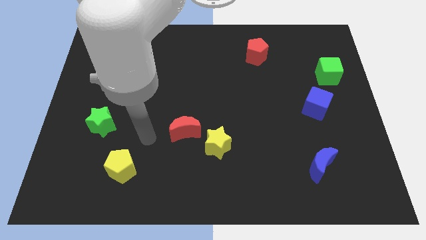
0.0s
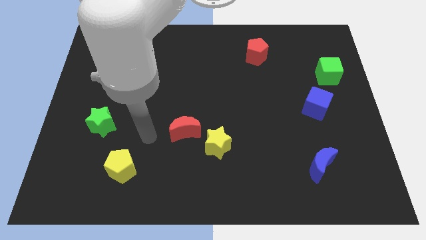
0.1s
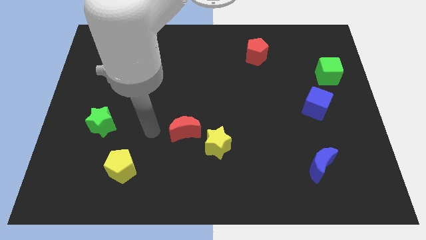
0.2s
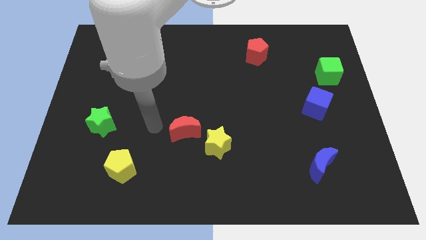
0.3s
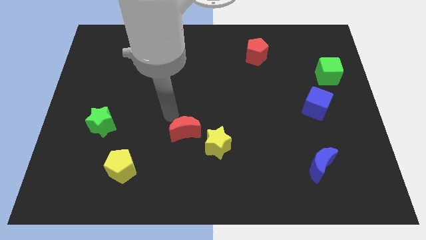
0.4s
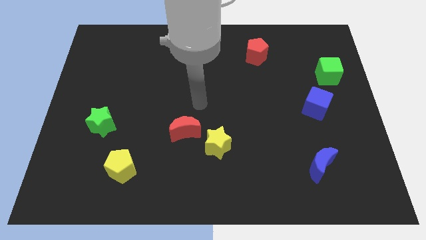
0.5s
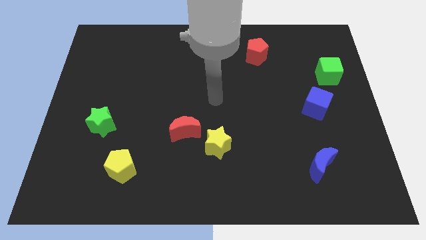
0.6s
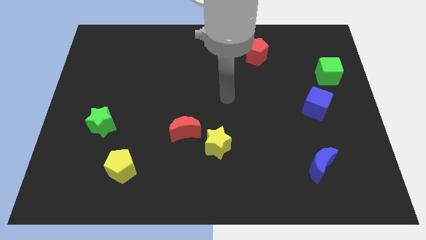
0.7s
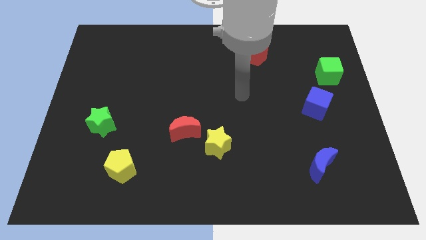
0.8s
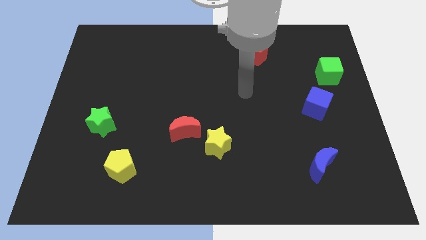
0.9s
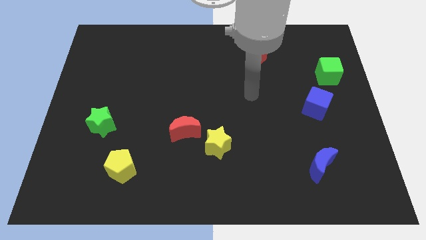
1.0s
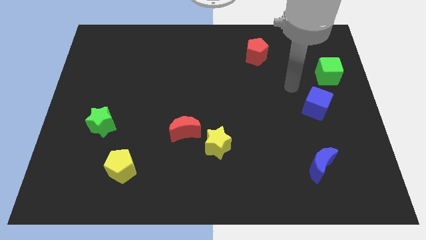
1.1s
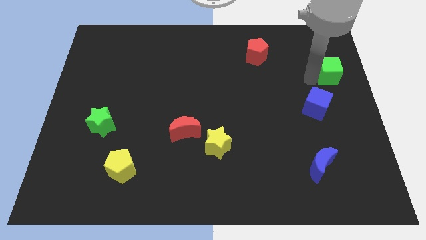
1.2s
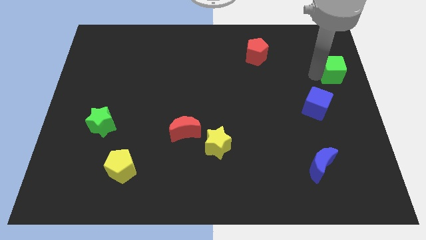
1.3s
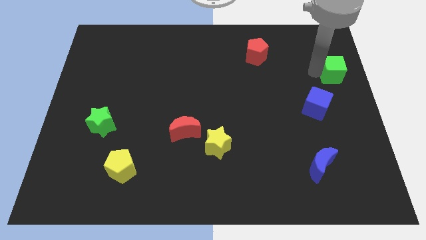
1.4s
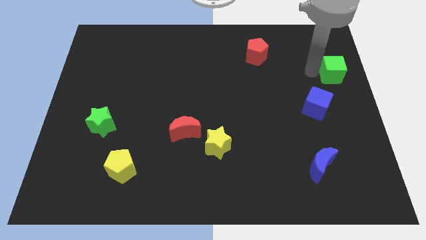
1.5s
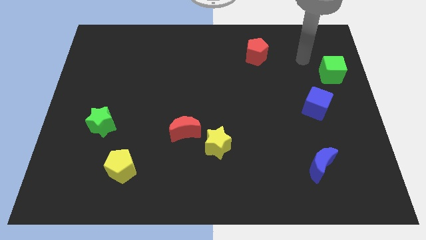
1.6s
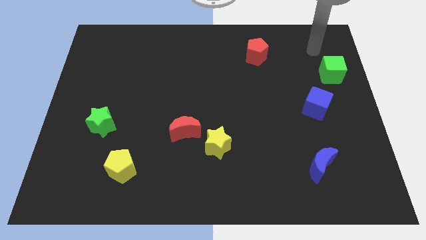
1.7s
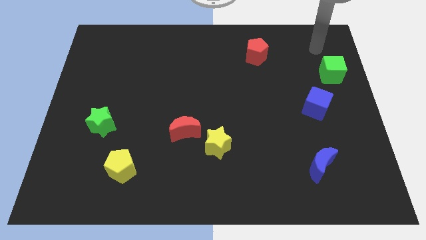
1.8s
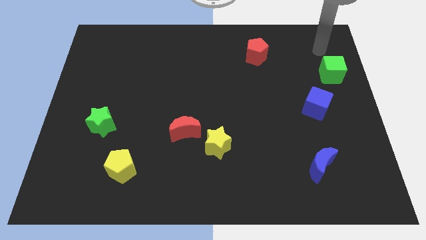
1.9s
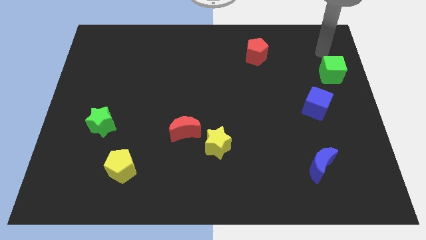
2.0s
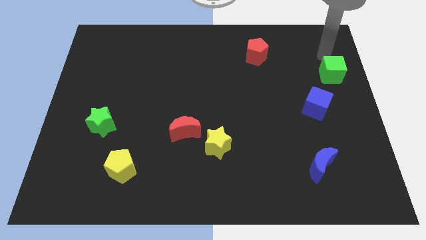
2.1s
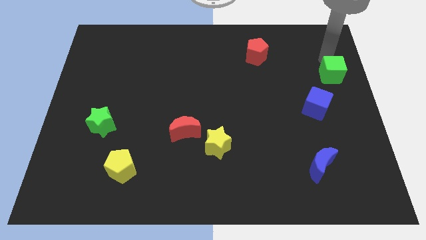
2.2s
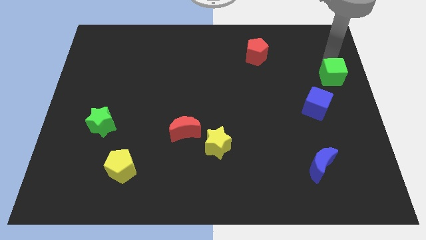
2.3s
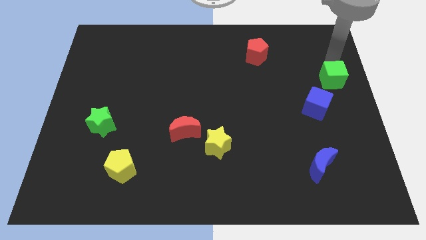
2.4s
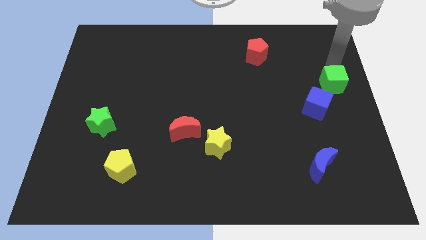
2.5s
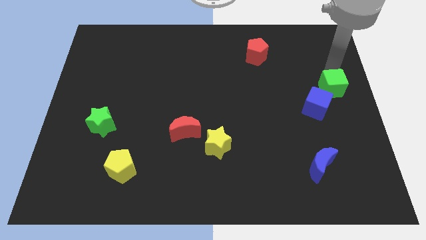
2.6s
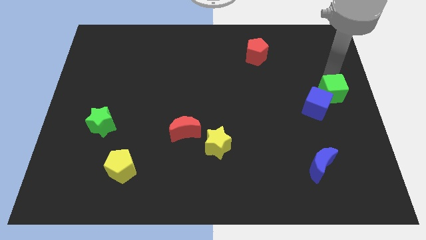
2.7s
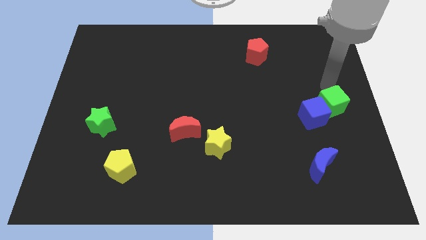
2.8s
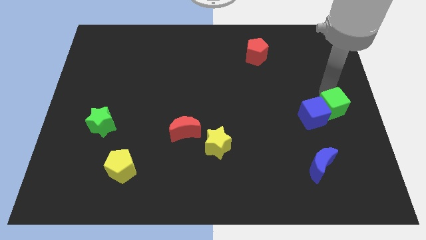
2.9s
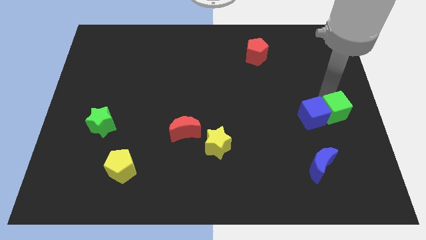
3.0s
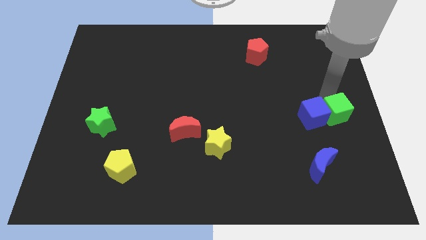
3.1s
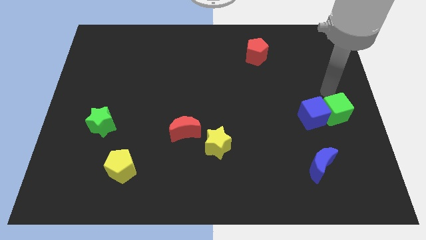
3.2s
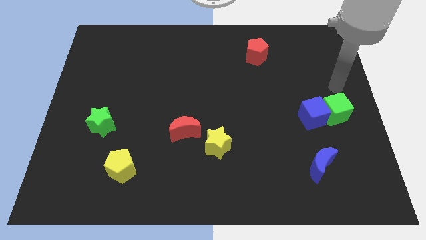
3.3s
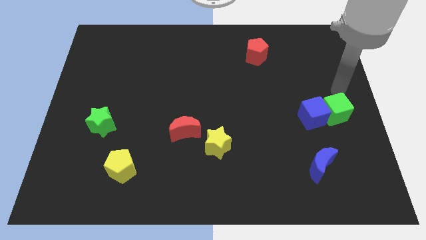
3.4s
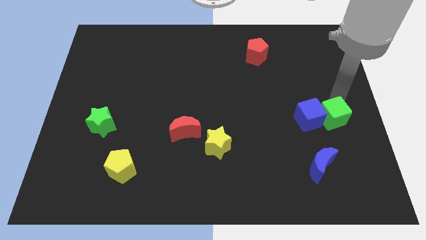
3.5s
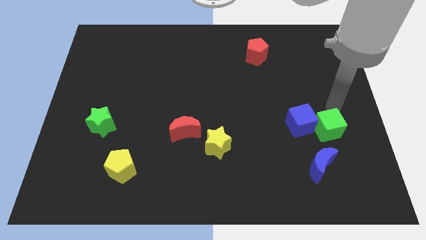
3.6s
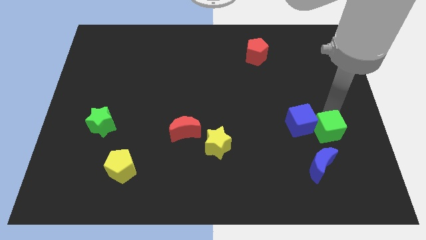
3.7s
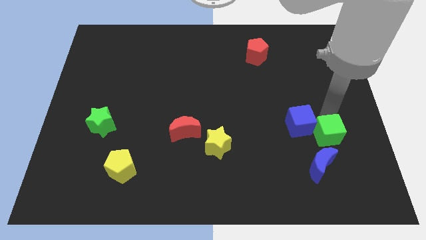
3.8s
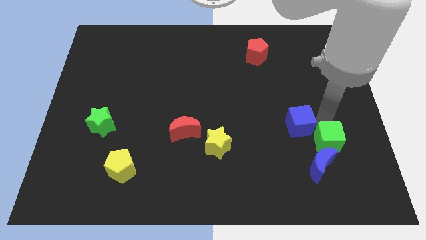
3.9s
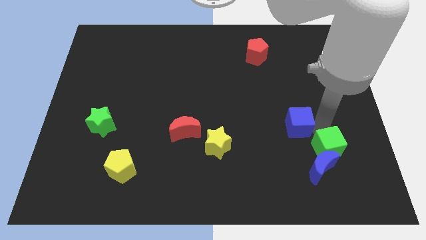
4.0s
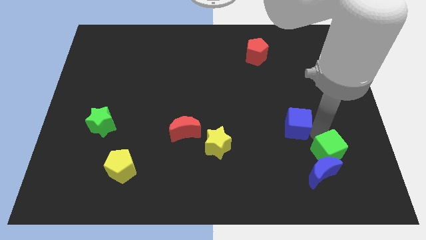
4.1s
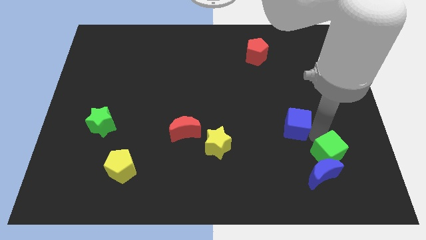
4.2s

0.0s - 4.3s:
move the green cube towards the blue moon

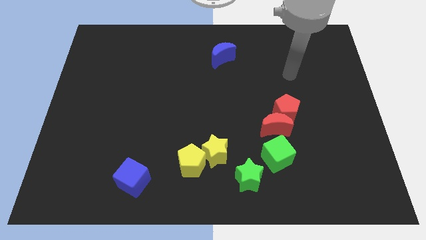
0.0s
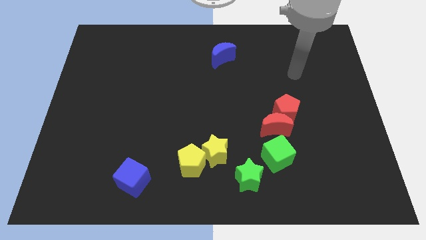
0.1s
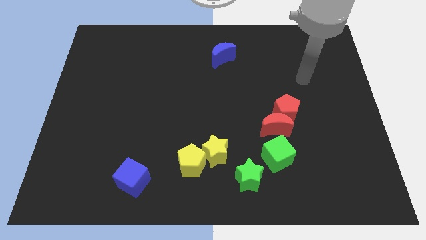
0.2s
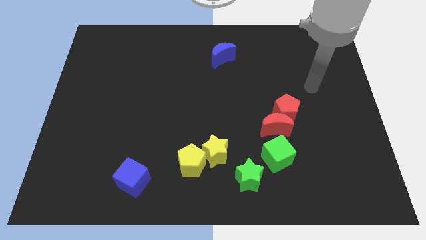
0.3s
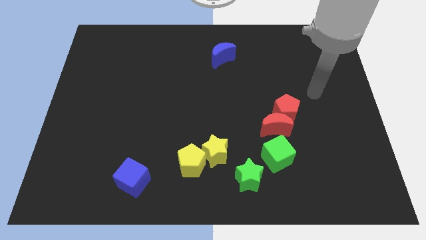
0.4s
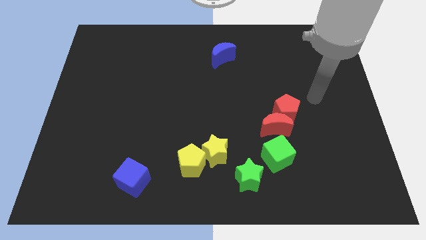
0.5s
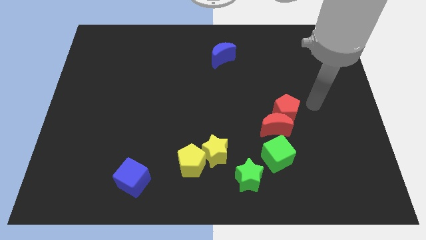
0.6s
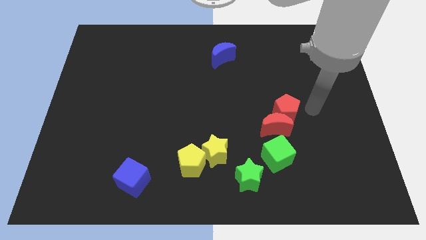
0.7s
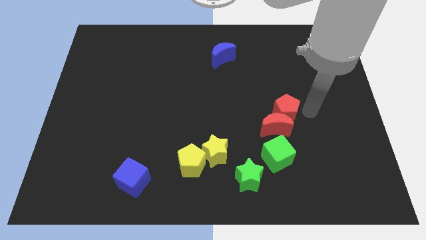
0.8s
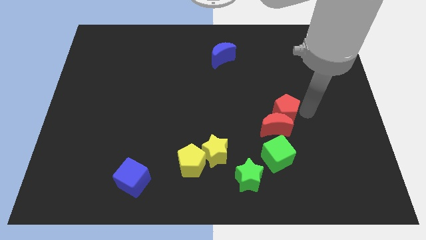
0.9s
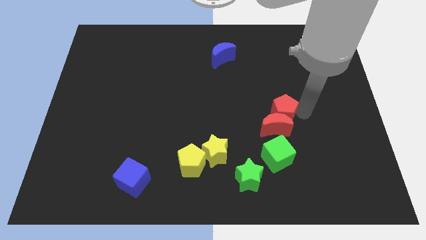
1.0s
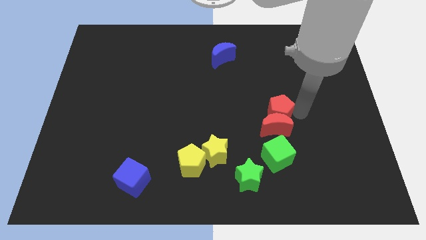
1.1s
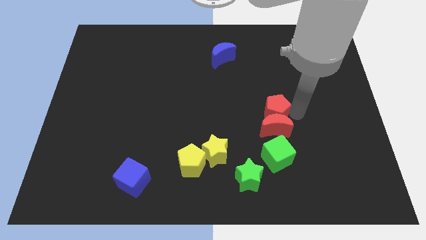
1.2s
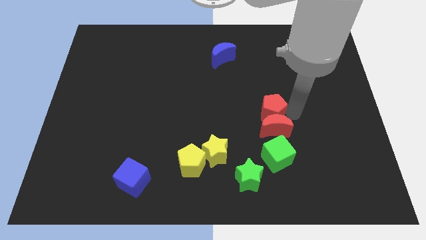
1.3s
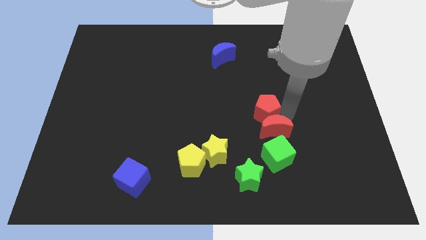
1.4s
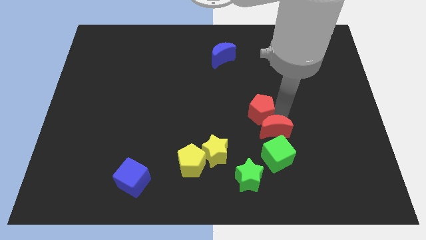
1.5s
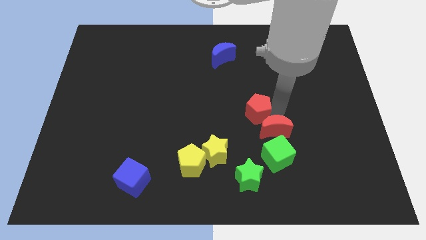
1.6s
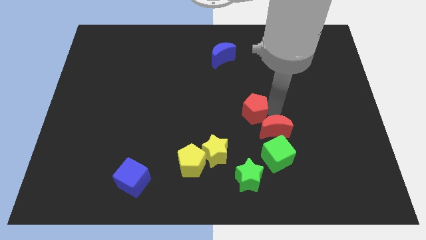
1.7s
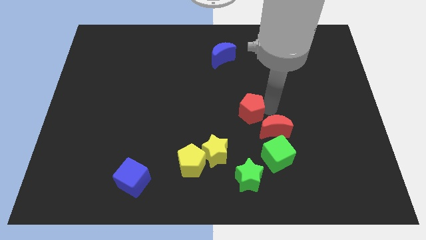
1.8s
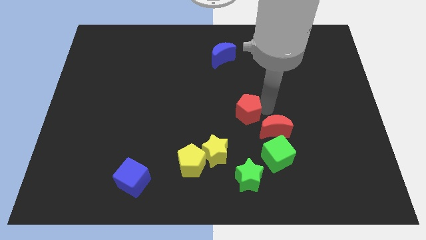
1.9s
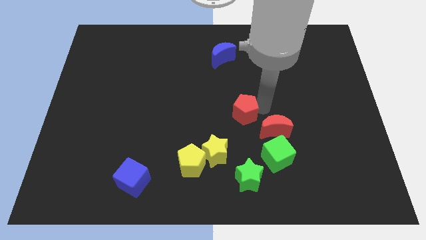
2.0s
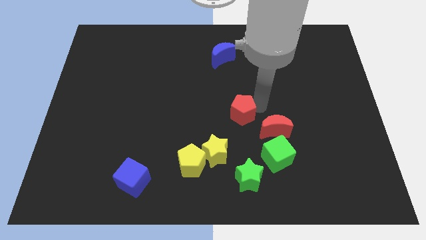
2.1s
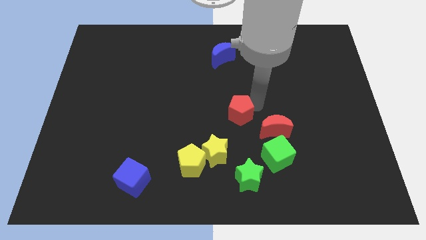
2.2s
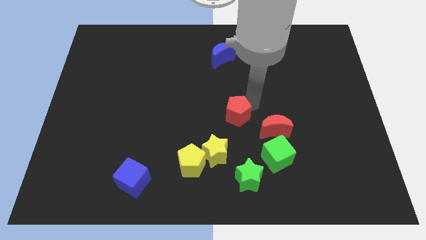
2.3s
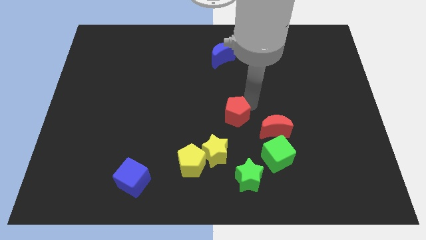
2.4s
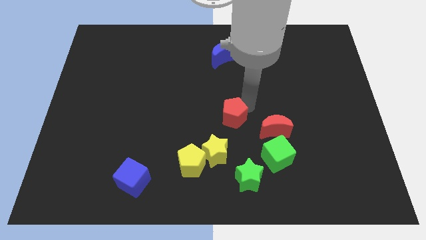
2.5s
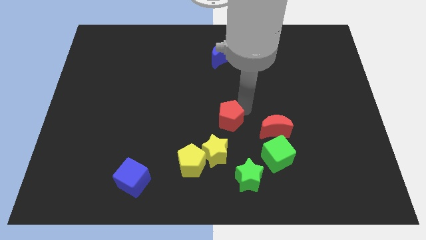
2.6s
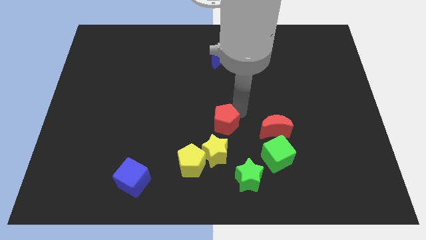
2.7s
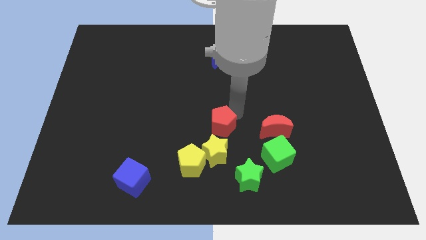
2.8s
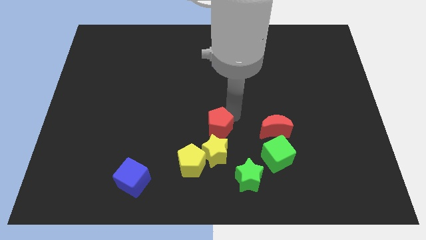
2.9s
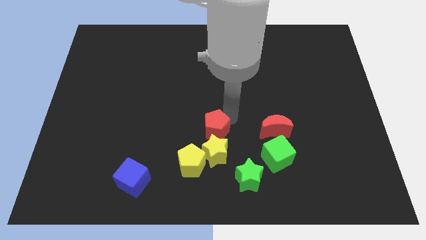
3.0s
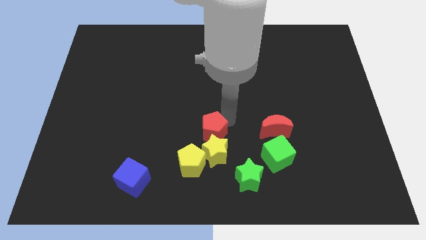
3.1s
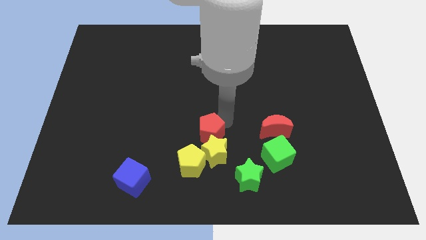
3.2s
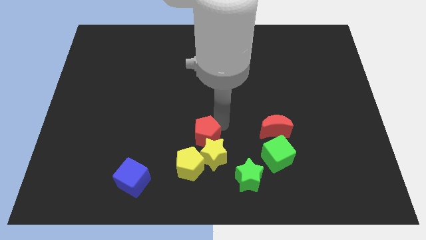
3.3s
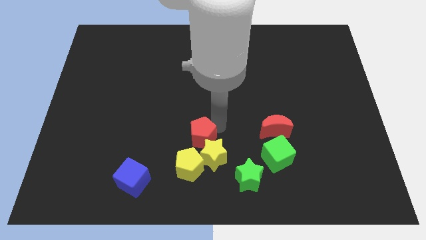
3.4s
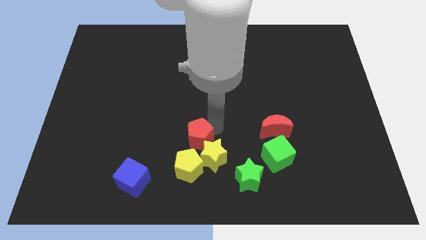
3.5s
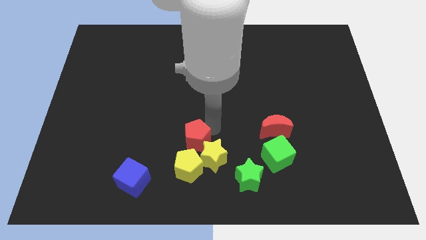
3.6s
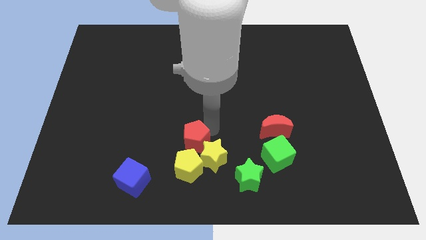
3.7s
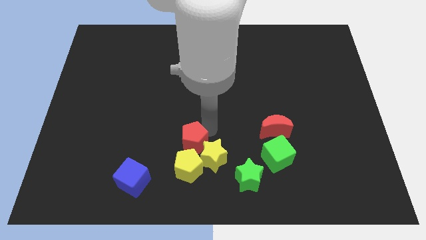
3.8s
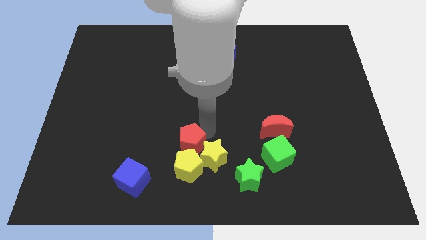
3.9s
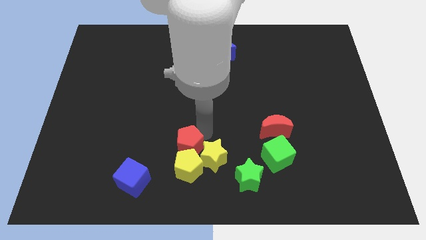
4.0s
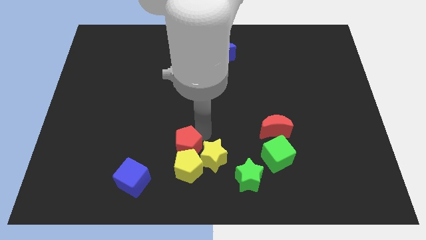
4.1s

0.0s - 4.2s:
put the red pentagon close to the yellow pentagon
